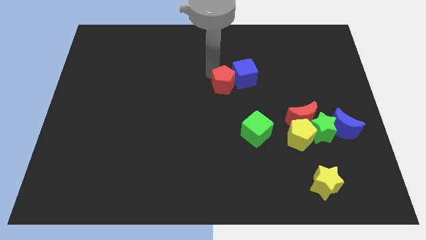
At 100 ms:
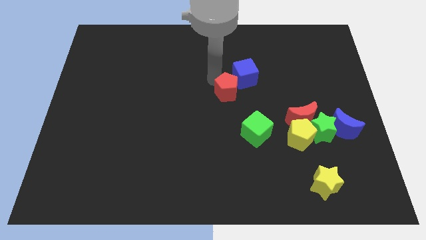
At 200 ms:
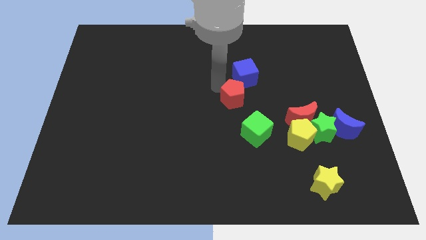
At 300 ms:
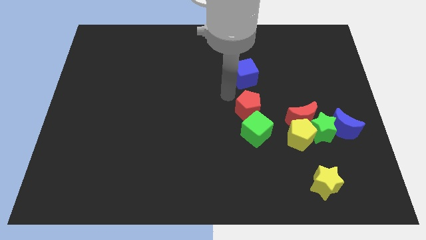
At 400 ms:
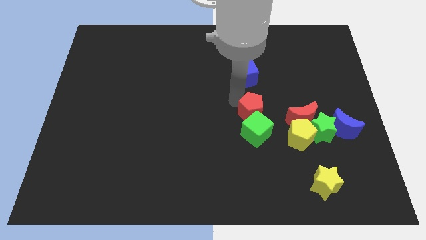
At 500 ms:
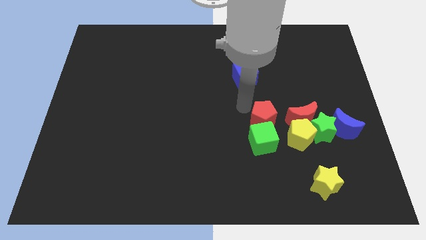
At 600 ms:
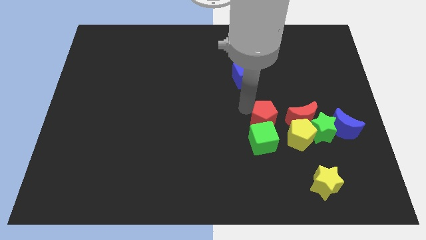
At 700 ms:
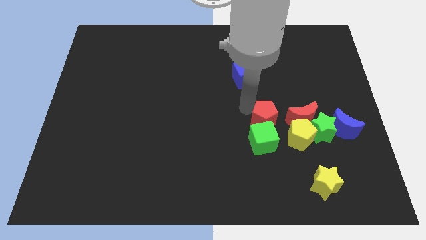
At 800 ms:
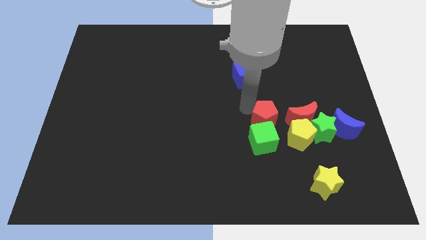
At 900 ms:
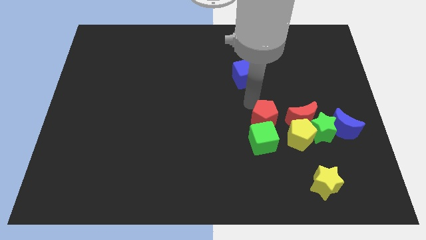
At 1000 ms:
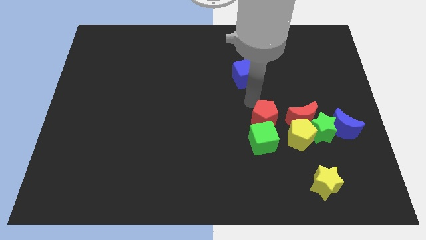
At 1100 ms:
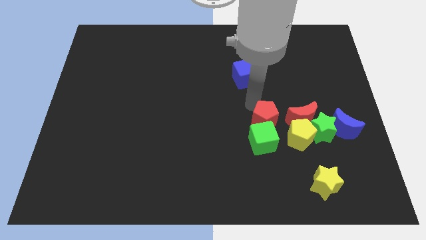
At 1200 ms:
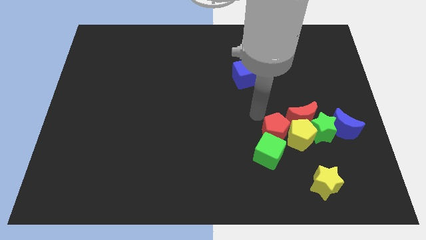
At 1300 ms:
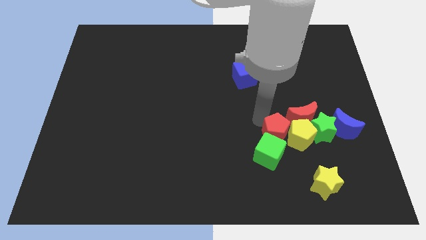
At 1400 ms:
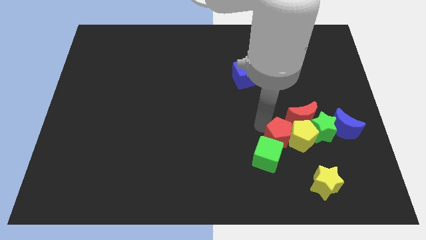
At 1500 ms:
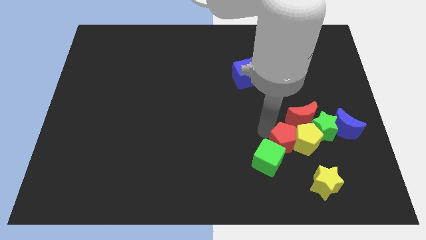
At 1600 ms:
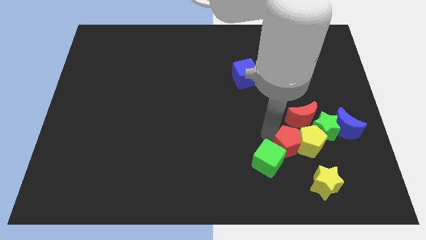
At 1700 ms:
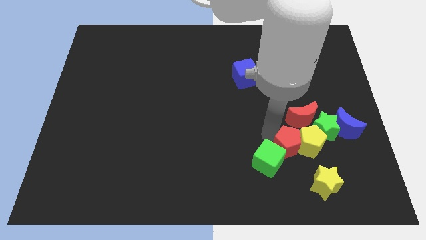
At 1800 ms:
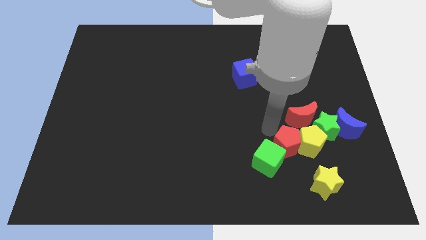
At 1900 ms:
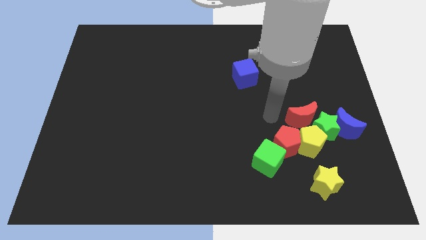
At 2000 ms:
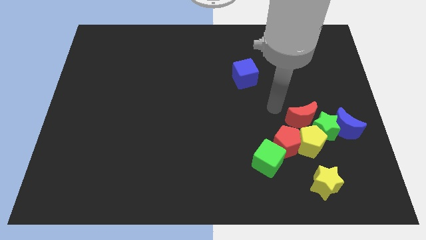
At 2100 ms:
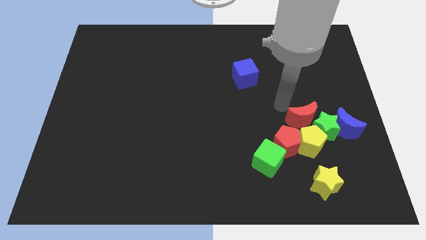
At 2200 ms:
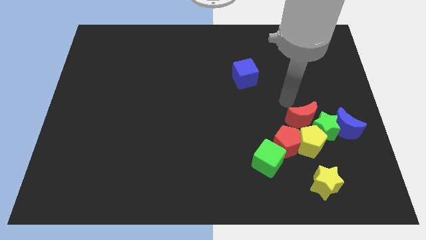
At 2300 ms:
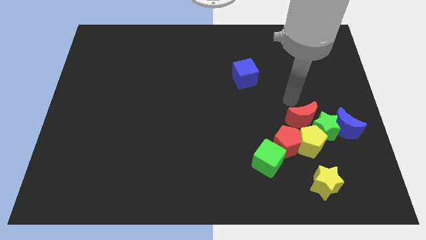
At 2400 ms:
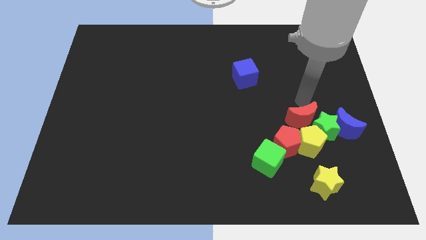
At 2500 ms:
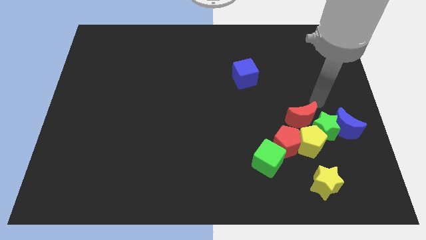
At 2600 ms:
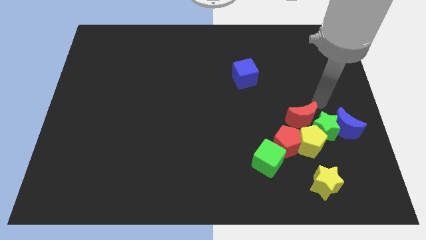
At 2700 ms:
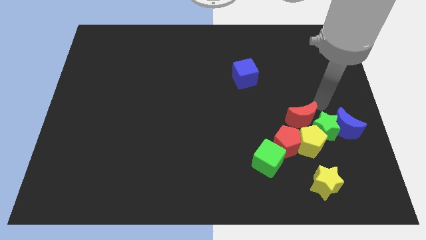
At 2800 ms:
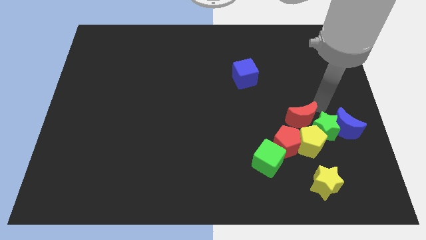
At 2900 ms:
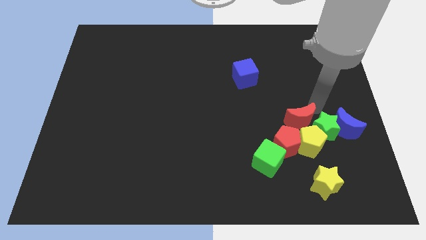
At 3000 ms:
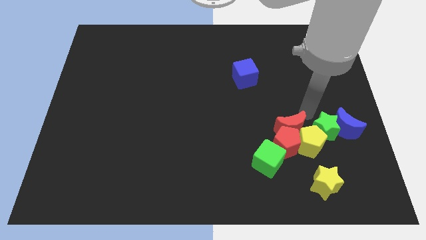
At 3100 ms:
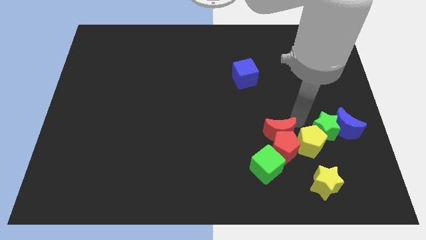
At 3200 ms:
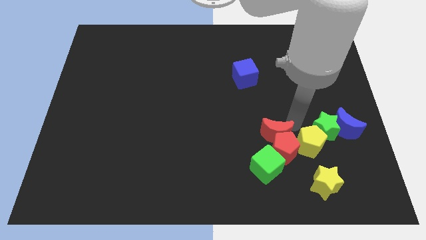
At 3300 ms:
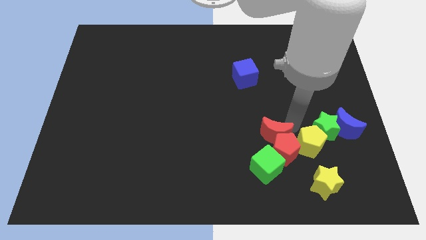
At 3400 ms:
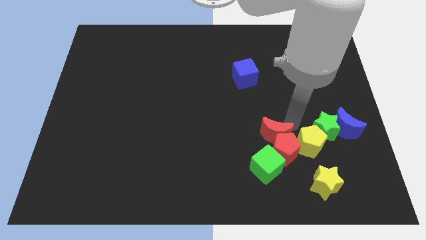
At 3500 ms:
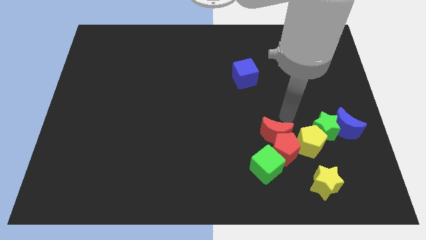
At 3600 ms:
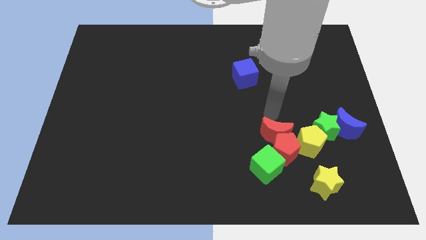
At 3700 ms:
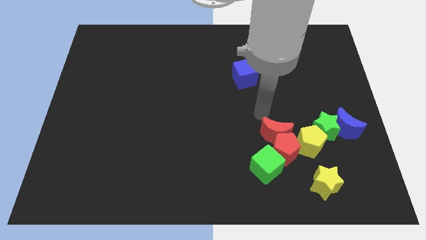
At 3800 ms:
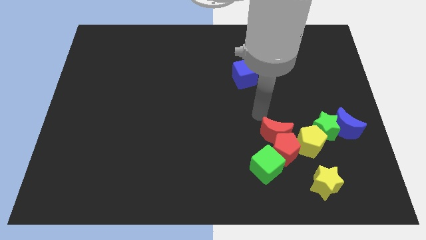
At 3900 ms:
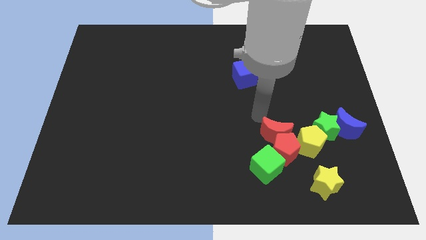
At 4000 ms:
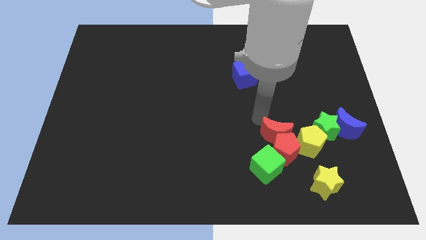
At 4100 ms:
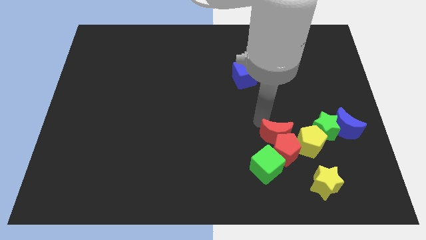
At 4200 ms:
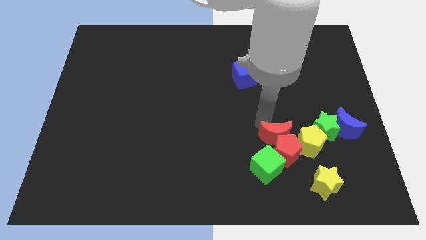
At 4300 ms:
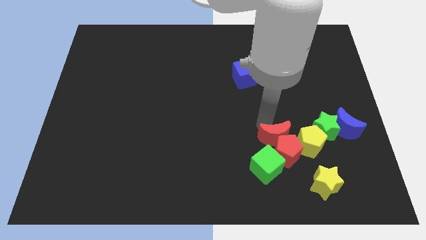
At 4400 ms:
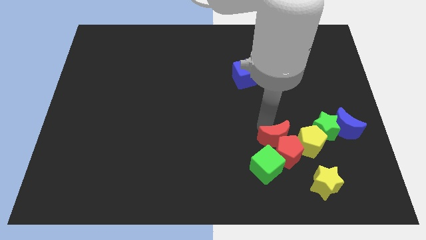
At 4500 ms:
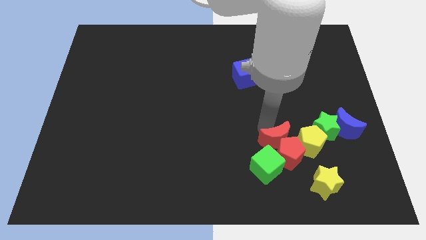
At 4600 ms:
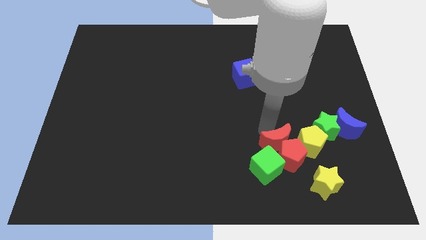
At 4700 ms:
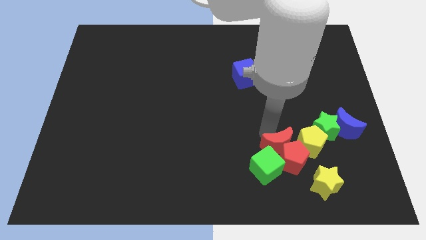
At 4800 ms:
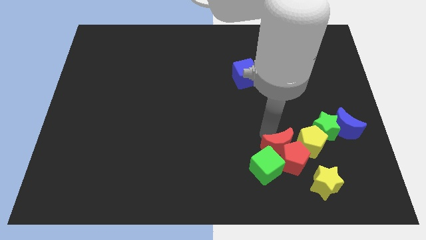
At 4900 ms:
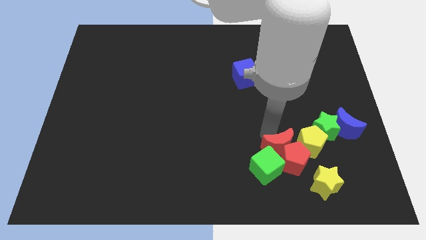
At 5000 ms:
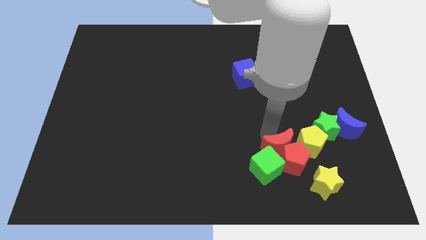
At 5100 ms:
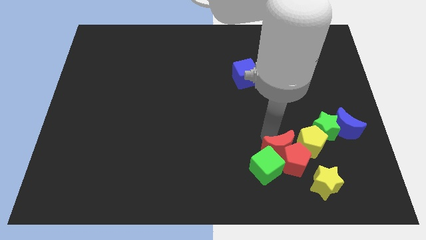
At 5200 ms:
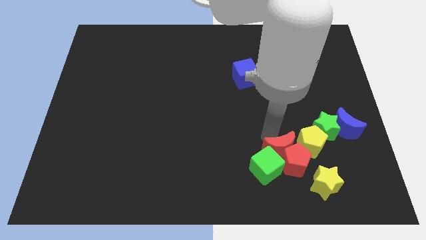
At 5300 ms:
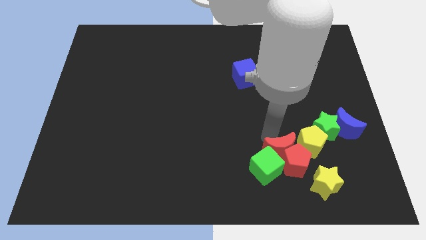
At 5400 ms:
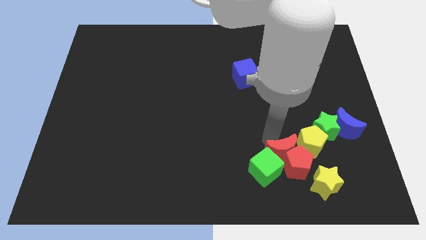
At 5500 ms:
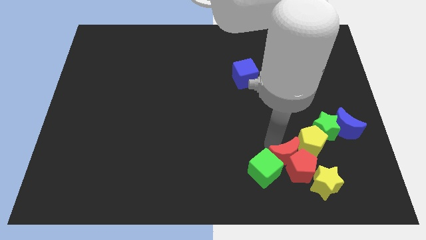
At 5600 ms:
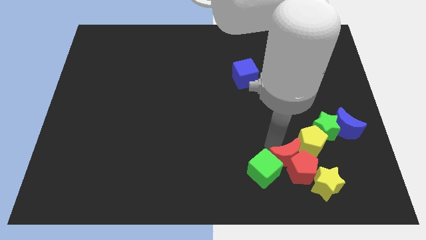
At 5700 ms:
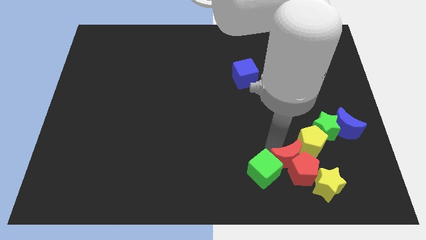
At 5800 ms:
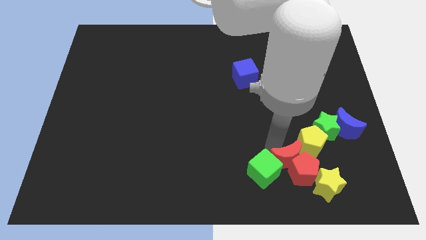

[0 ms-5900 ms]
move the red pentagon and crescent slightly down

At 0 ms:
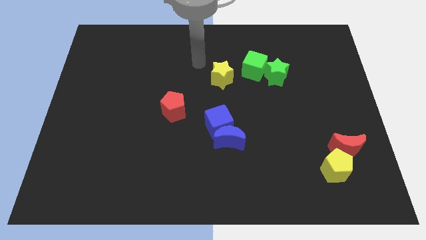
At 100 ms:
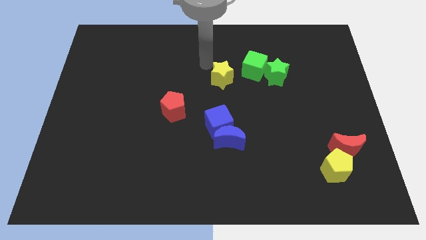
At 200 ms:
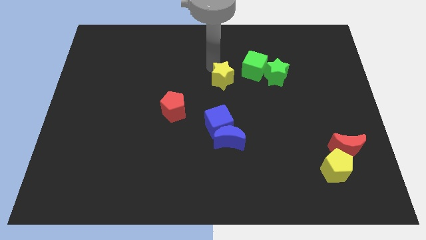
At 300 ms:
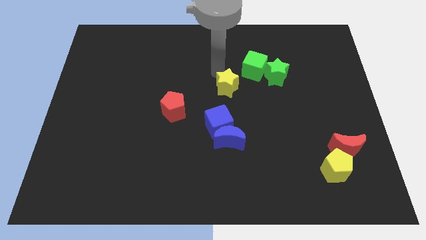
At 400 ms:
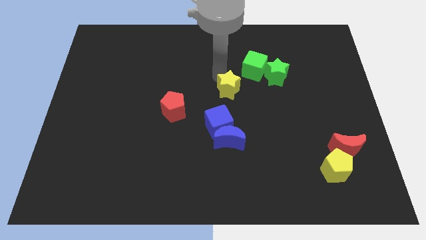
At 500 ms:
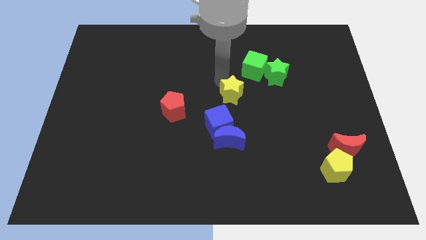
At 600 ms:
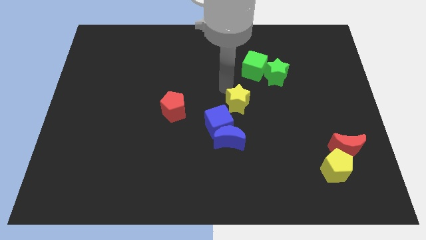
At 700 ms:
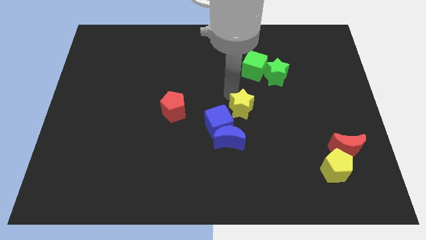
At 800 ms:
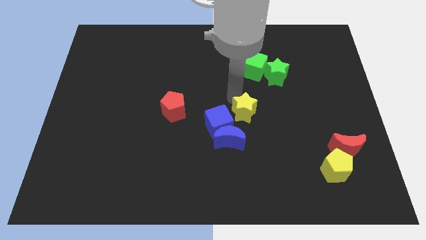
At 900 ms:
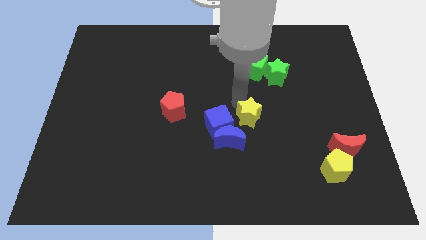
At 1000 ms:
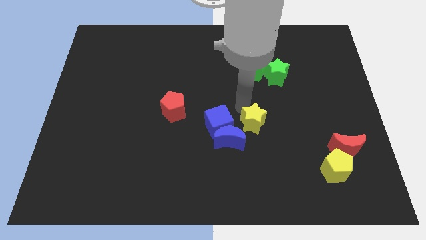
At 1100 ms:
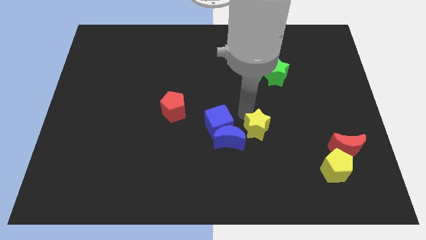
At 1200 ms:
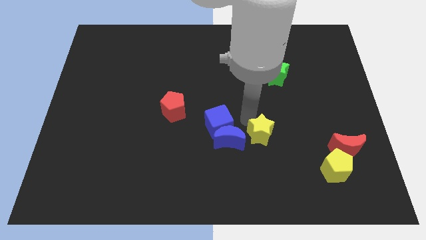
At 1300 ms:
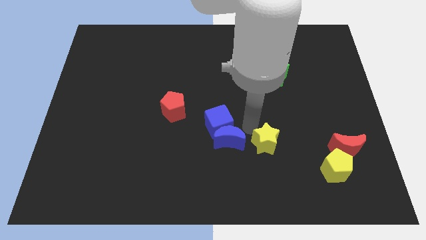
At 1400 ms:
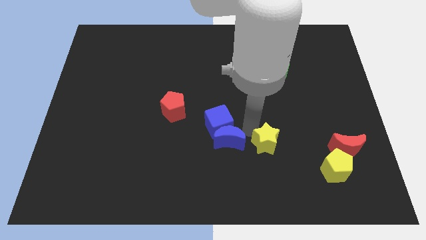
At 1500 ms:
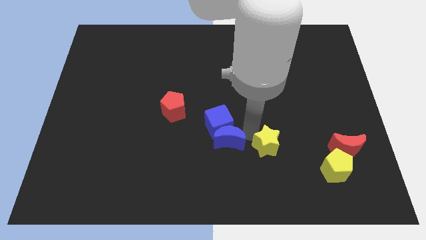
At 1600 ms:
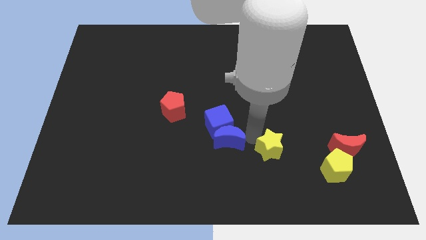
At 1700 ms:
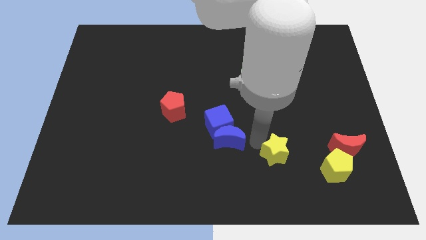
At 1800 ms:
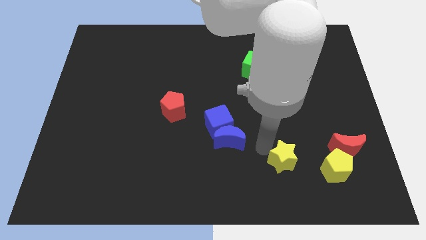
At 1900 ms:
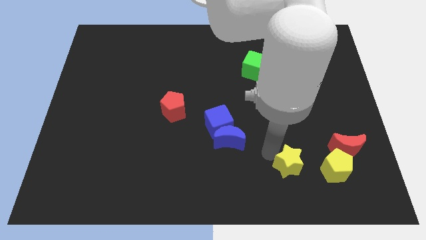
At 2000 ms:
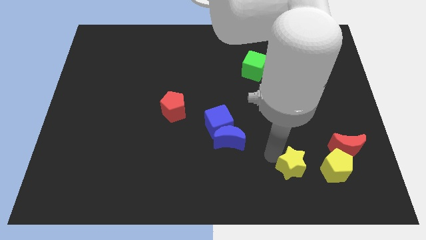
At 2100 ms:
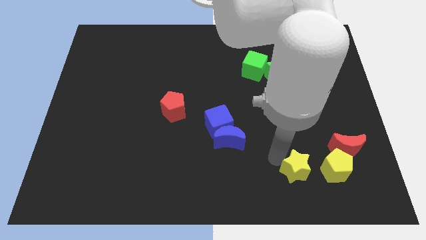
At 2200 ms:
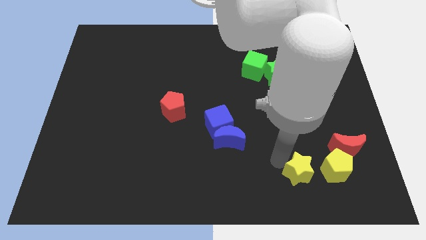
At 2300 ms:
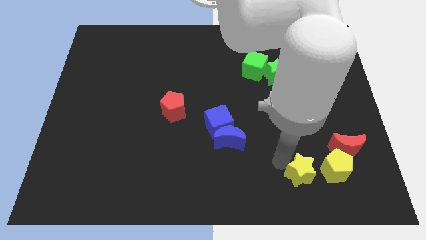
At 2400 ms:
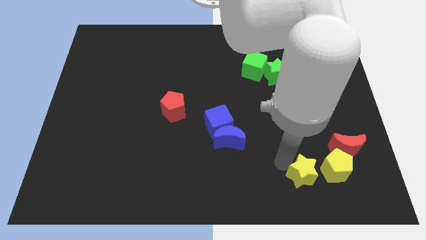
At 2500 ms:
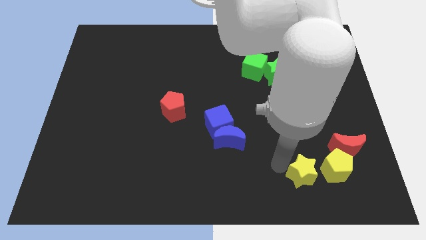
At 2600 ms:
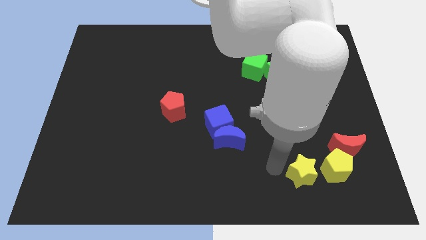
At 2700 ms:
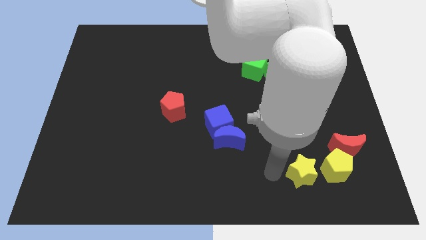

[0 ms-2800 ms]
move the yellow star left to the yellow pentagon

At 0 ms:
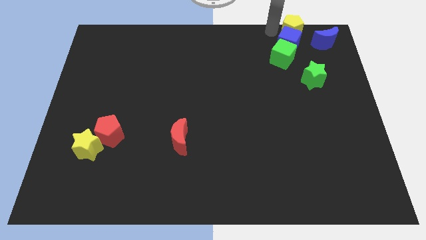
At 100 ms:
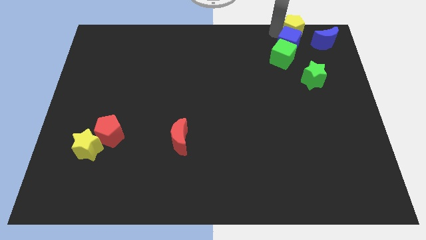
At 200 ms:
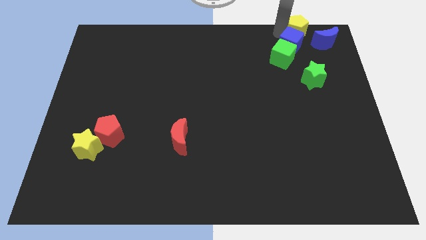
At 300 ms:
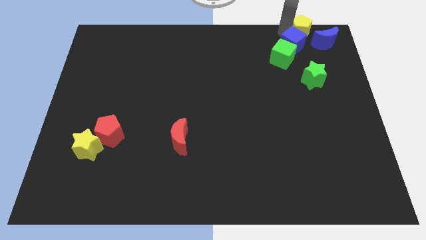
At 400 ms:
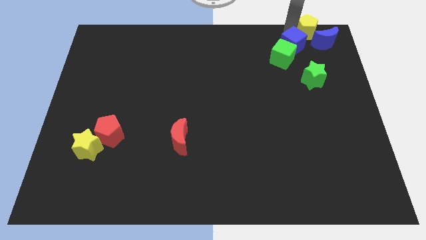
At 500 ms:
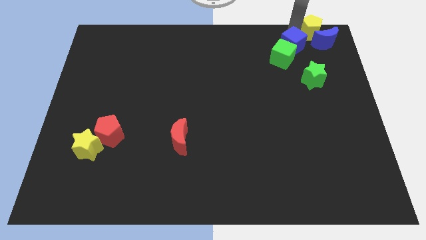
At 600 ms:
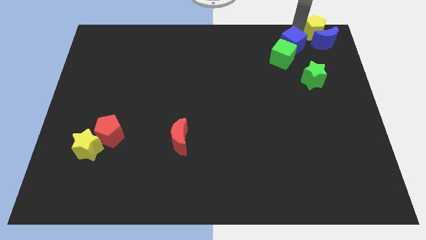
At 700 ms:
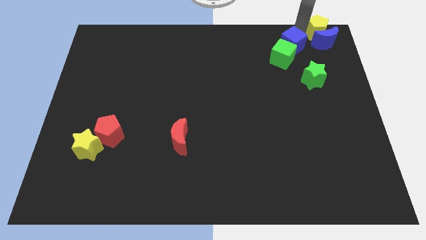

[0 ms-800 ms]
move the yellow pentagon above to the blue crescent
